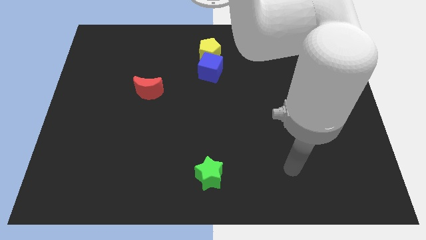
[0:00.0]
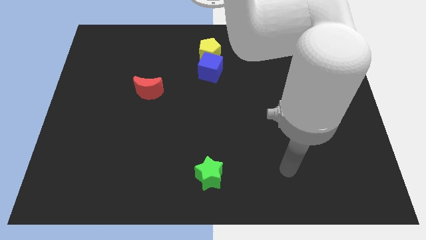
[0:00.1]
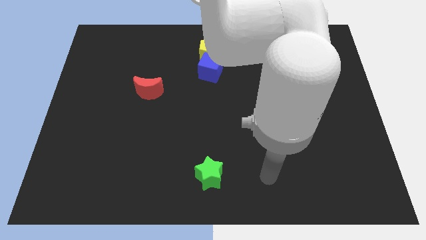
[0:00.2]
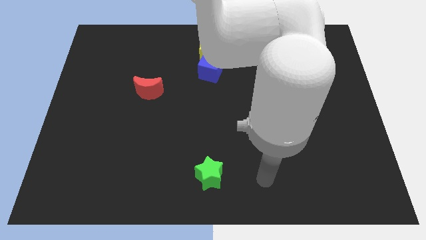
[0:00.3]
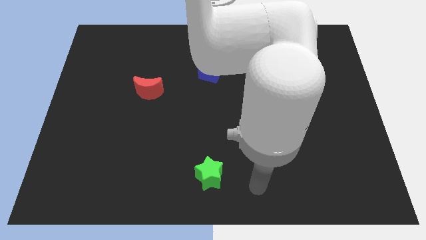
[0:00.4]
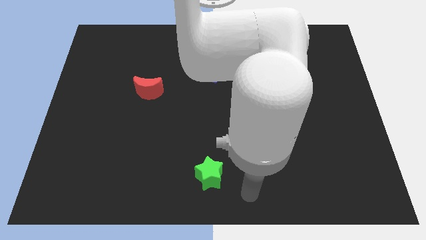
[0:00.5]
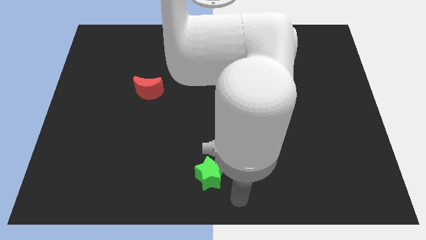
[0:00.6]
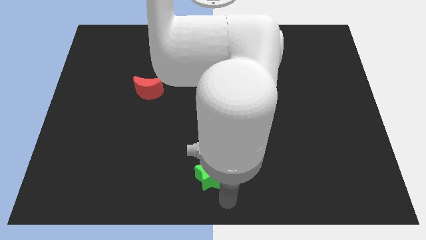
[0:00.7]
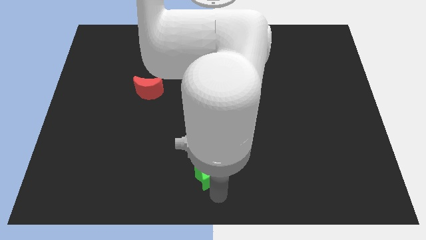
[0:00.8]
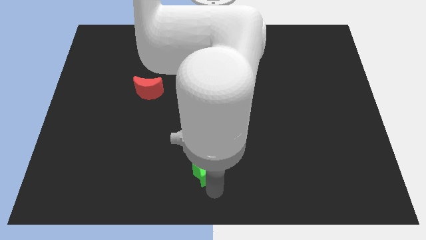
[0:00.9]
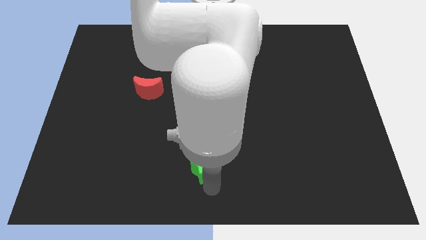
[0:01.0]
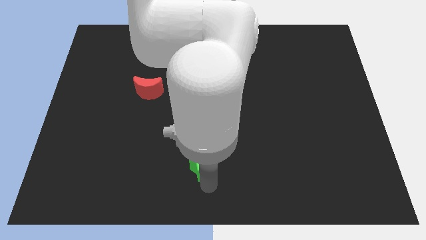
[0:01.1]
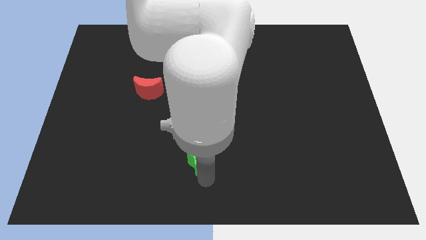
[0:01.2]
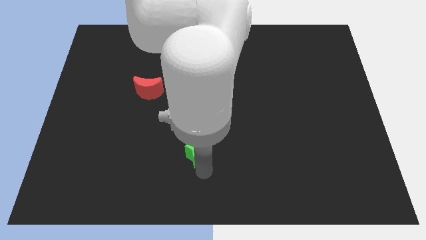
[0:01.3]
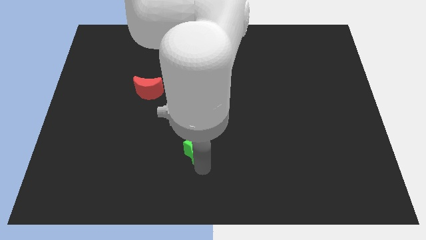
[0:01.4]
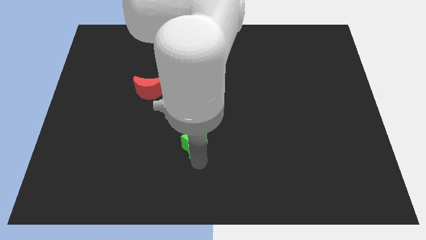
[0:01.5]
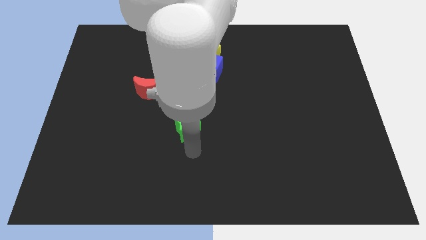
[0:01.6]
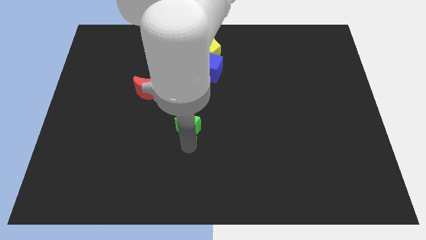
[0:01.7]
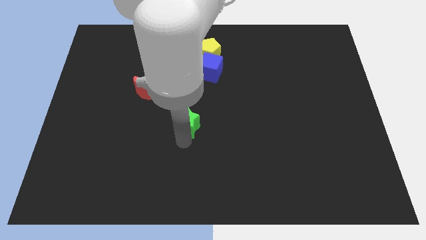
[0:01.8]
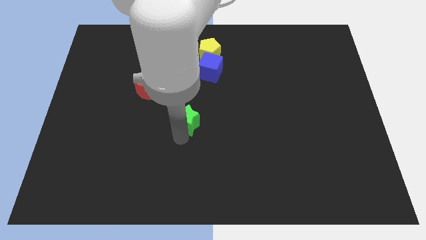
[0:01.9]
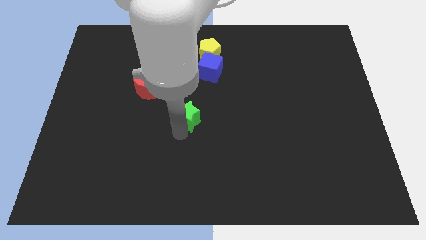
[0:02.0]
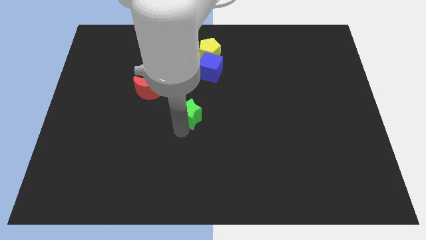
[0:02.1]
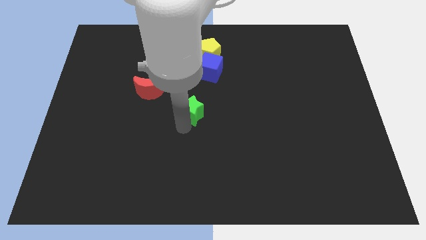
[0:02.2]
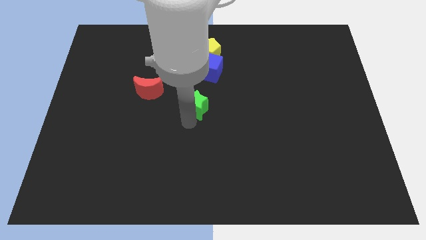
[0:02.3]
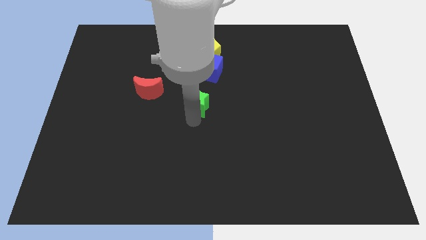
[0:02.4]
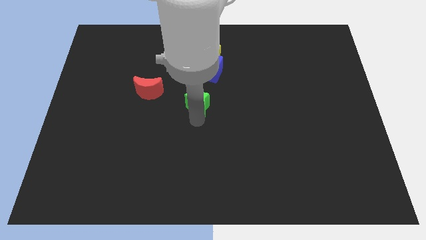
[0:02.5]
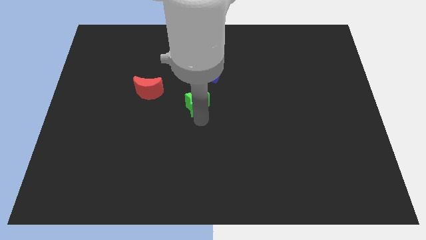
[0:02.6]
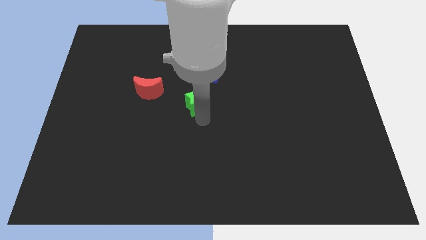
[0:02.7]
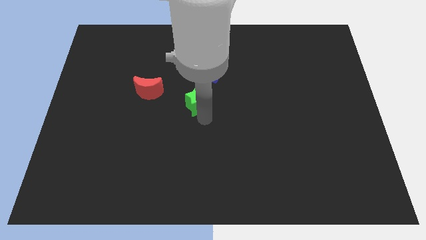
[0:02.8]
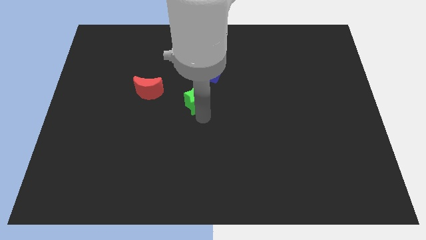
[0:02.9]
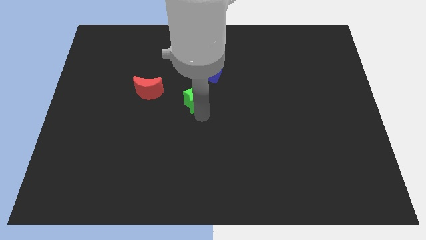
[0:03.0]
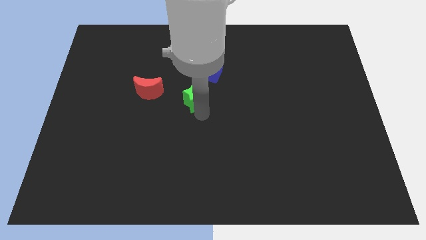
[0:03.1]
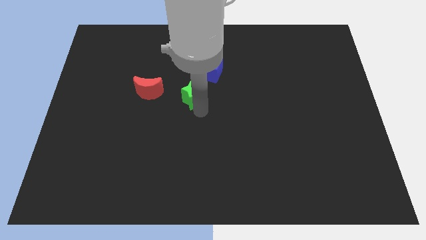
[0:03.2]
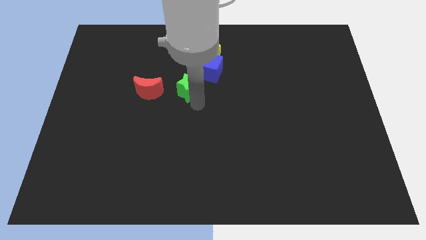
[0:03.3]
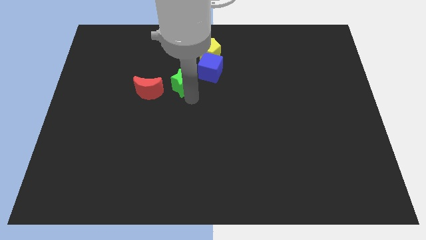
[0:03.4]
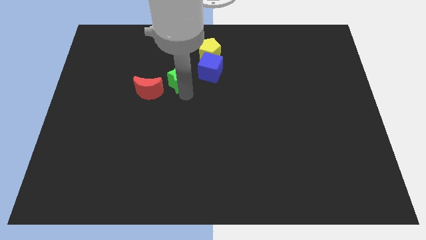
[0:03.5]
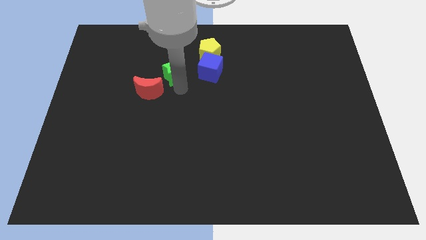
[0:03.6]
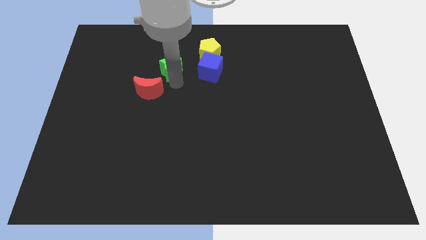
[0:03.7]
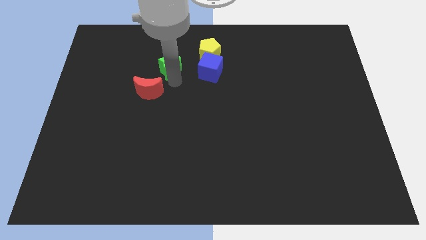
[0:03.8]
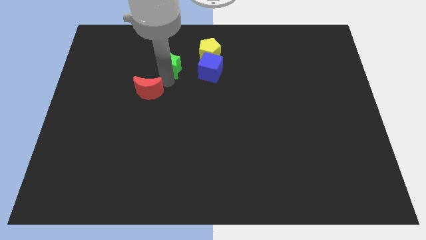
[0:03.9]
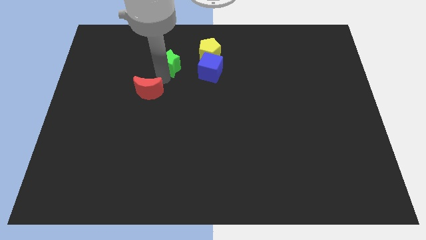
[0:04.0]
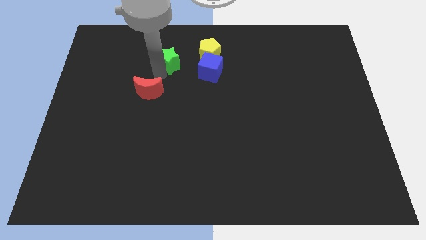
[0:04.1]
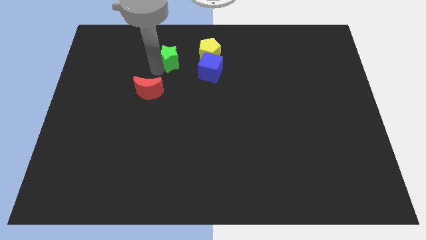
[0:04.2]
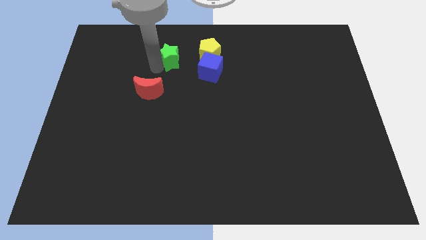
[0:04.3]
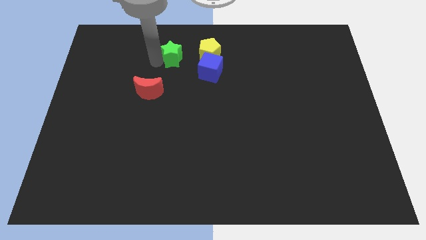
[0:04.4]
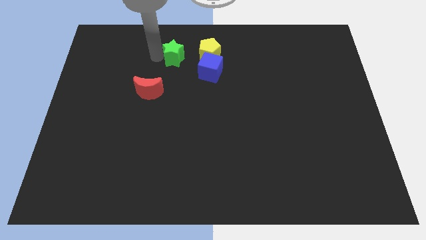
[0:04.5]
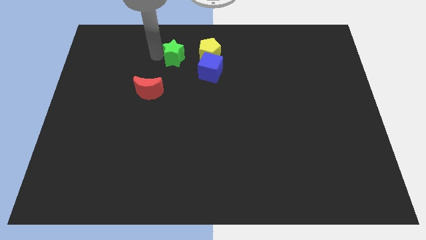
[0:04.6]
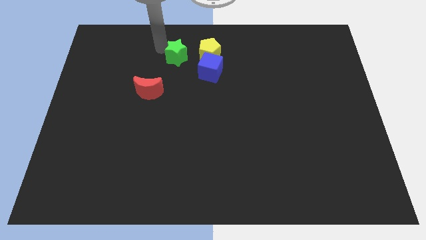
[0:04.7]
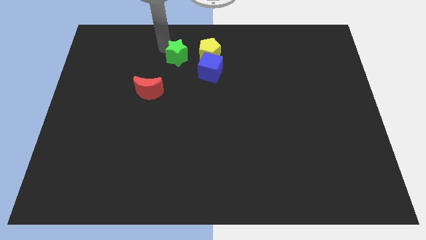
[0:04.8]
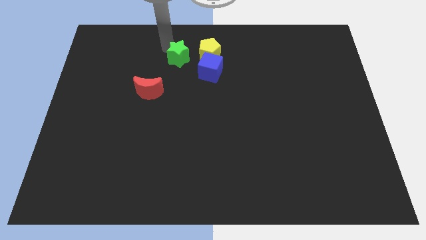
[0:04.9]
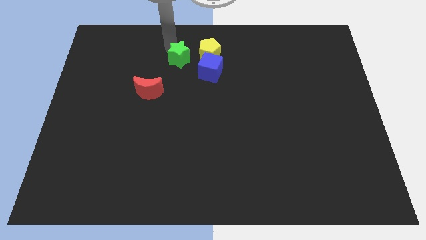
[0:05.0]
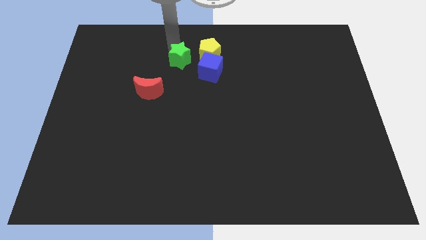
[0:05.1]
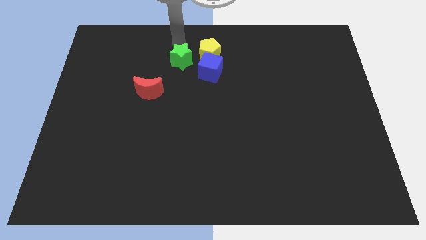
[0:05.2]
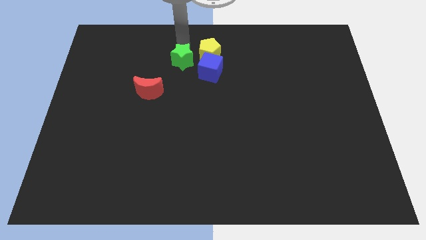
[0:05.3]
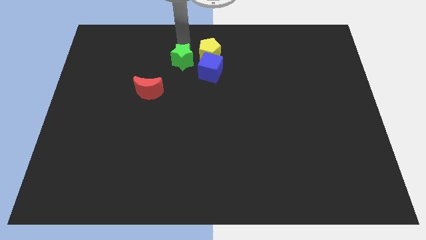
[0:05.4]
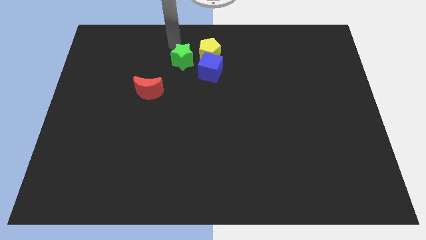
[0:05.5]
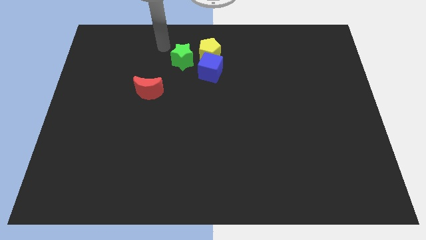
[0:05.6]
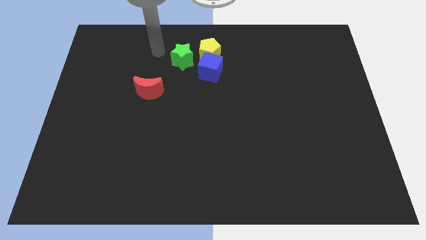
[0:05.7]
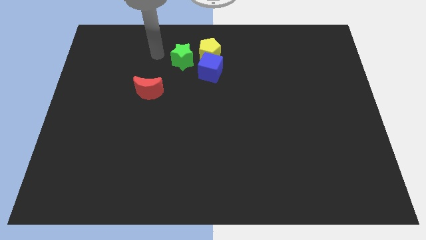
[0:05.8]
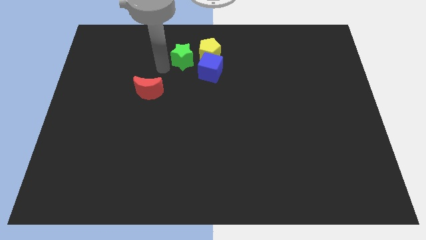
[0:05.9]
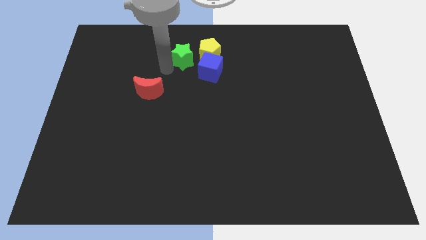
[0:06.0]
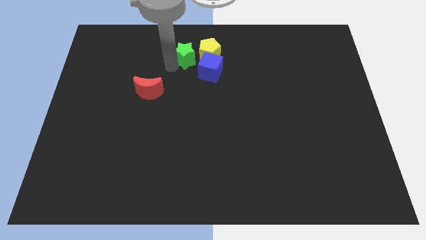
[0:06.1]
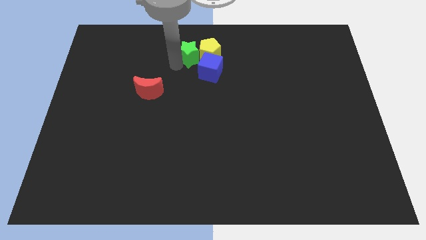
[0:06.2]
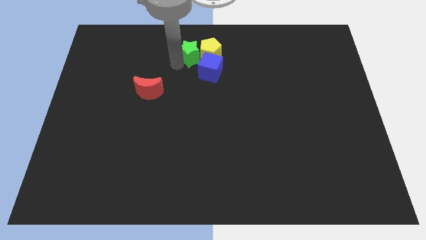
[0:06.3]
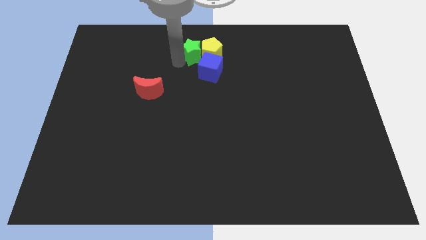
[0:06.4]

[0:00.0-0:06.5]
move the green star to the pentagon

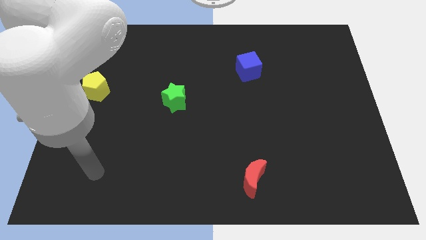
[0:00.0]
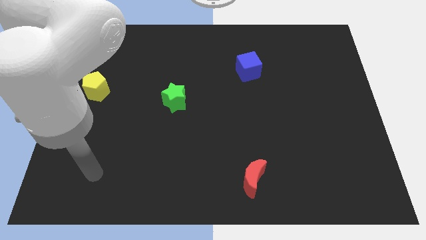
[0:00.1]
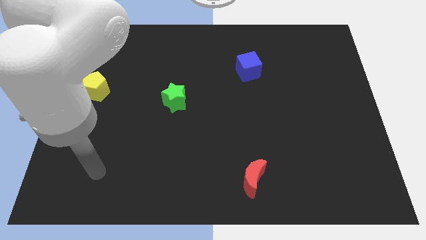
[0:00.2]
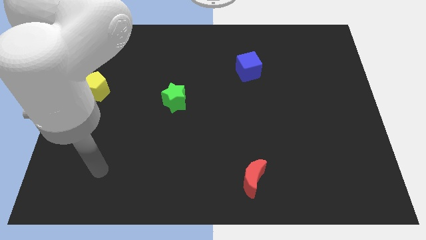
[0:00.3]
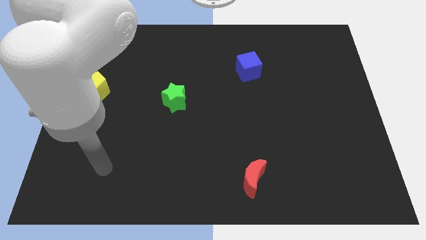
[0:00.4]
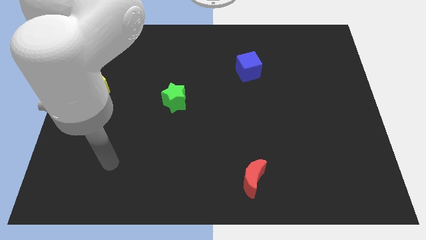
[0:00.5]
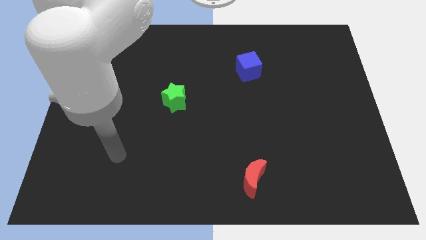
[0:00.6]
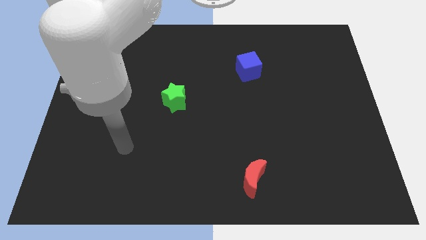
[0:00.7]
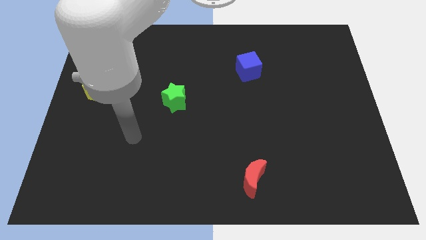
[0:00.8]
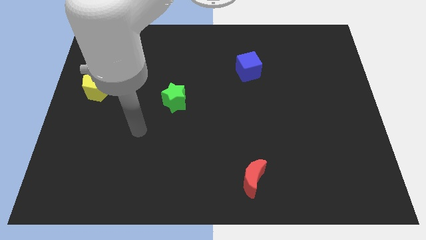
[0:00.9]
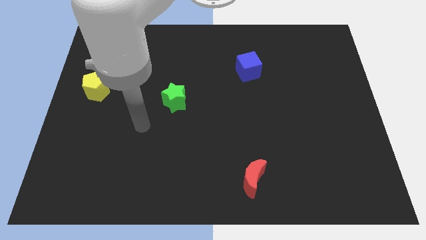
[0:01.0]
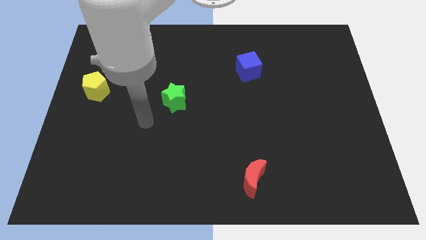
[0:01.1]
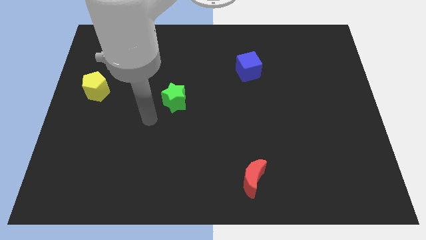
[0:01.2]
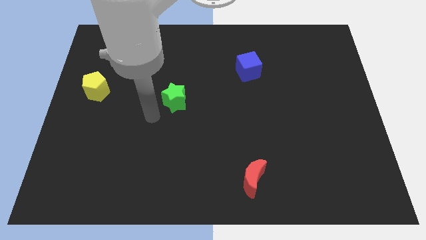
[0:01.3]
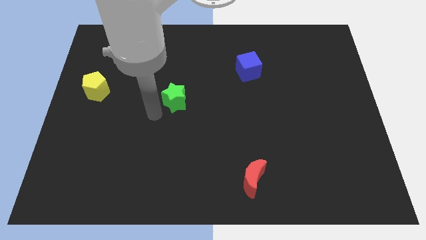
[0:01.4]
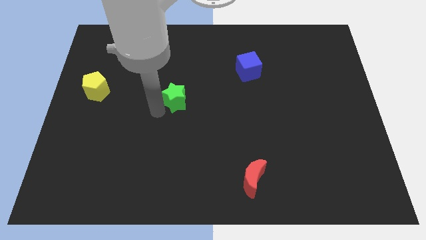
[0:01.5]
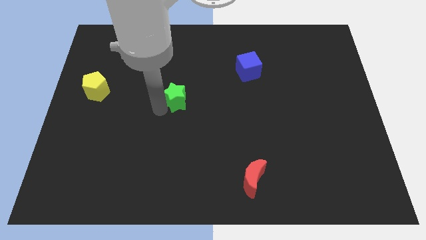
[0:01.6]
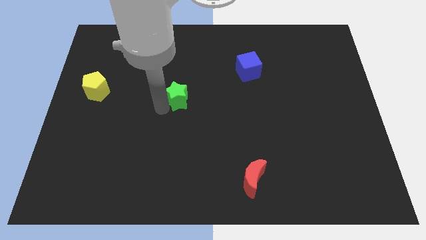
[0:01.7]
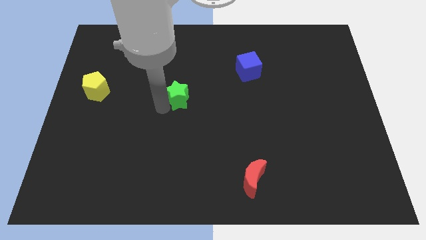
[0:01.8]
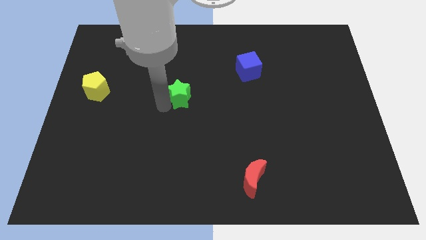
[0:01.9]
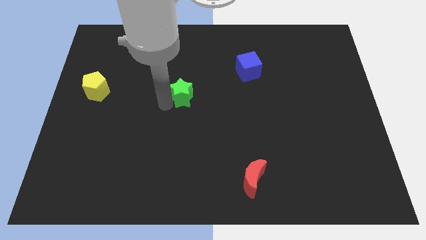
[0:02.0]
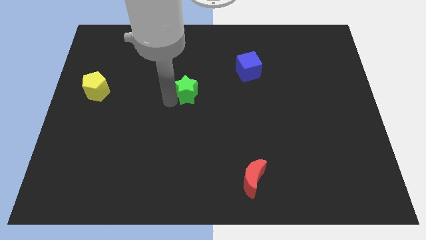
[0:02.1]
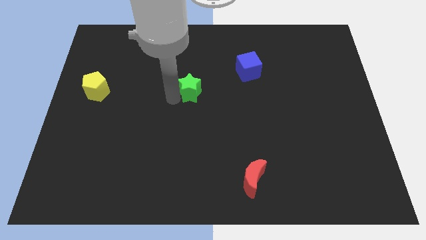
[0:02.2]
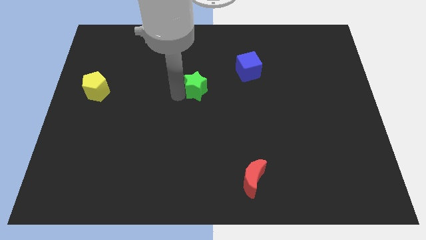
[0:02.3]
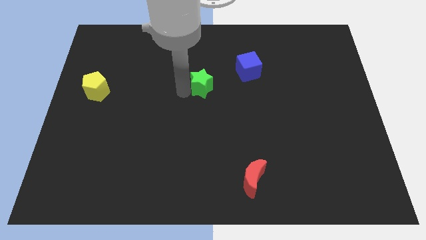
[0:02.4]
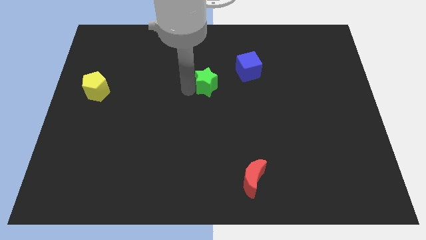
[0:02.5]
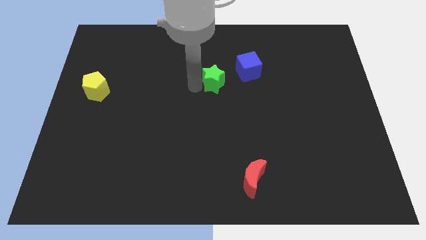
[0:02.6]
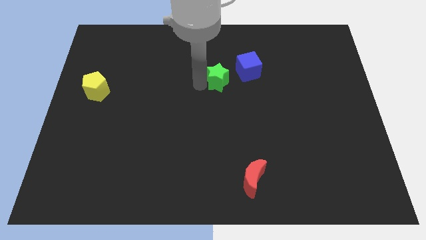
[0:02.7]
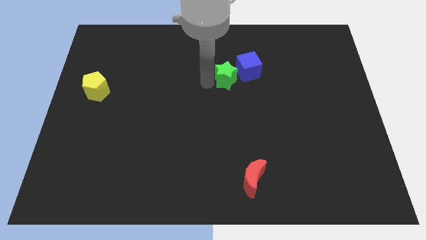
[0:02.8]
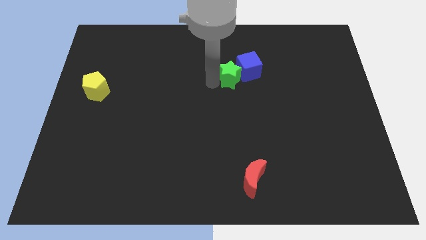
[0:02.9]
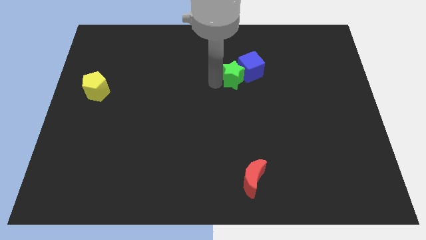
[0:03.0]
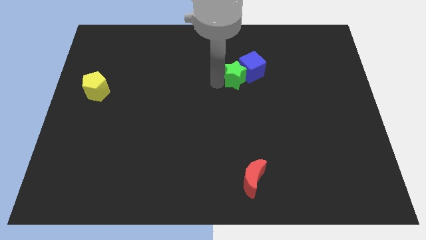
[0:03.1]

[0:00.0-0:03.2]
move the green block next to the blue cube
